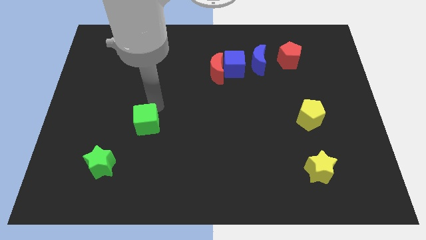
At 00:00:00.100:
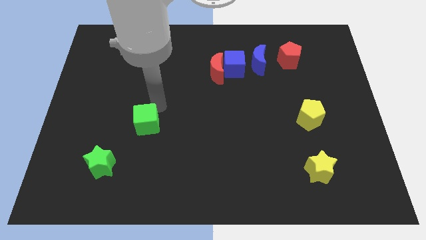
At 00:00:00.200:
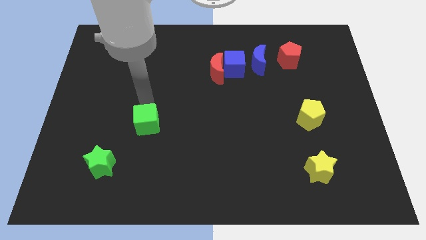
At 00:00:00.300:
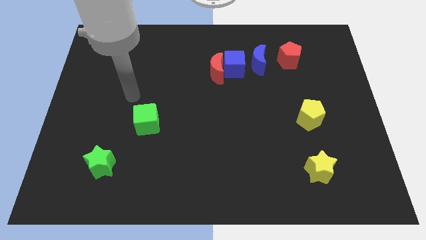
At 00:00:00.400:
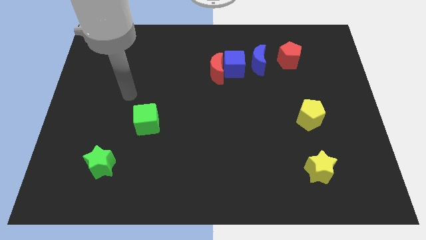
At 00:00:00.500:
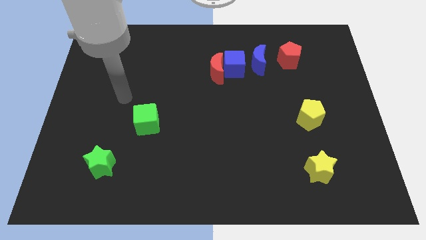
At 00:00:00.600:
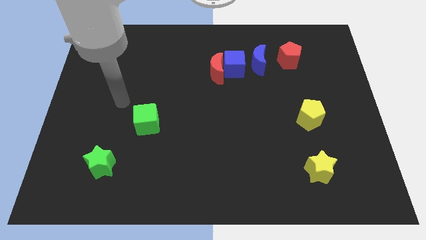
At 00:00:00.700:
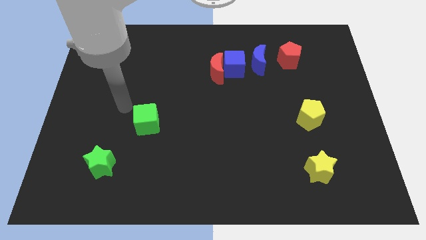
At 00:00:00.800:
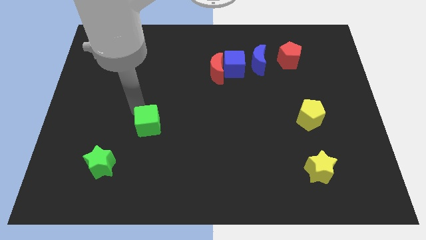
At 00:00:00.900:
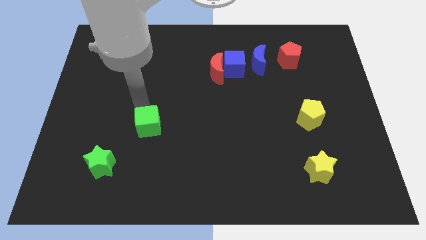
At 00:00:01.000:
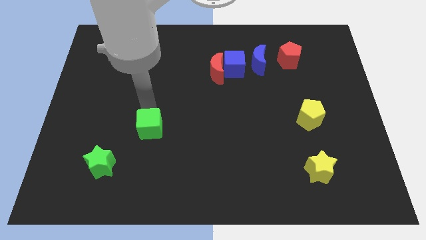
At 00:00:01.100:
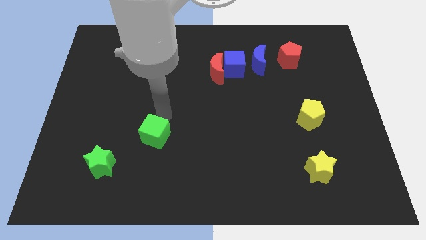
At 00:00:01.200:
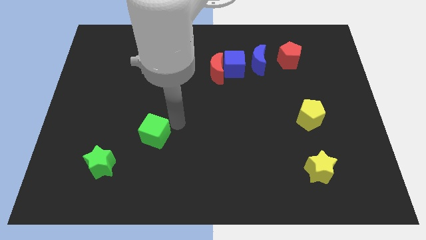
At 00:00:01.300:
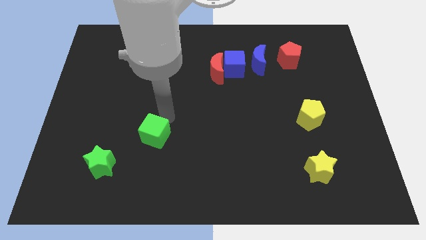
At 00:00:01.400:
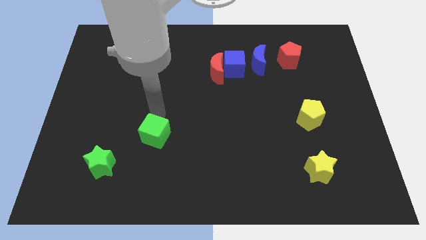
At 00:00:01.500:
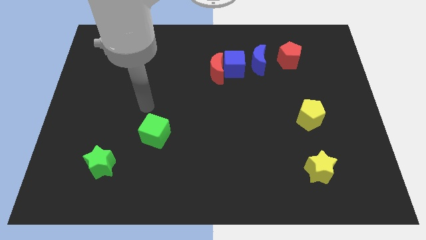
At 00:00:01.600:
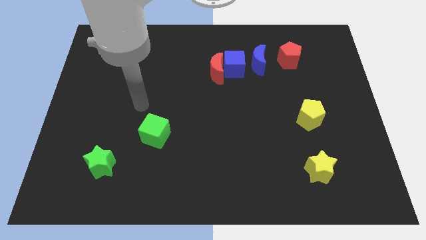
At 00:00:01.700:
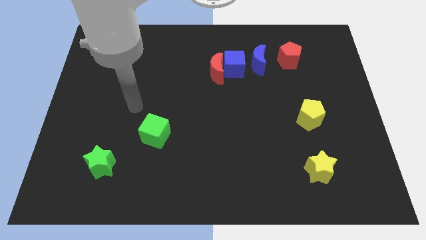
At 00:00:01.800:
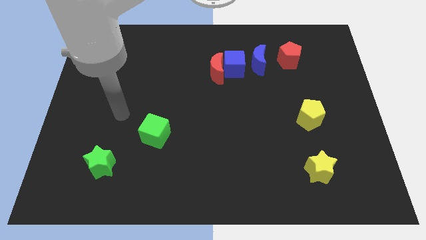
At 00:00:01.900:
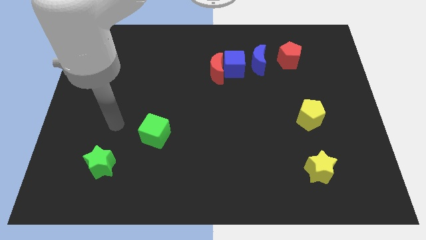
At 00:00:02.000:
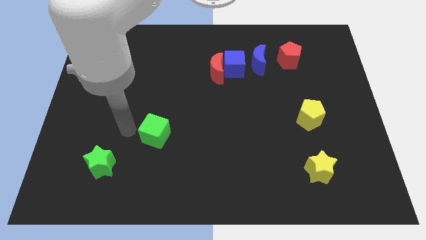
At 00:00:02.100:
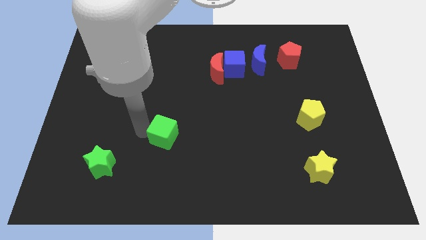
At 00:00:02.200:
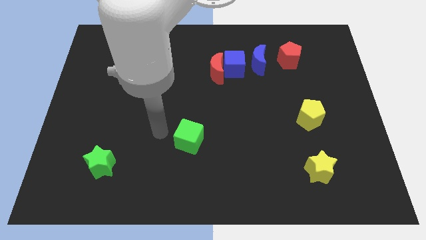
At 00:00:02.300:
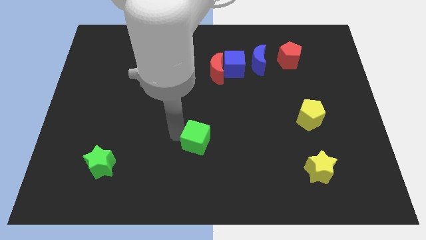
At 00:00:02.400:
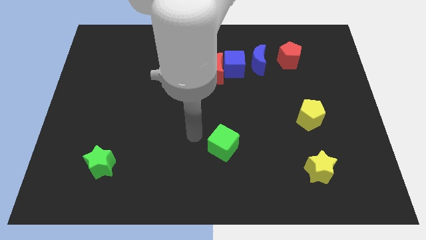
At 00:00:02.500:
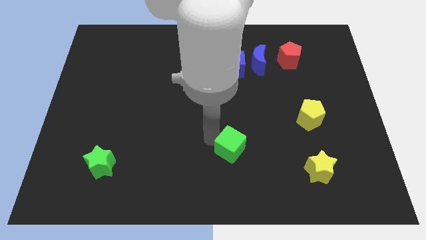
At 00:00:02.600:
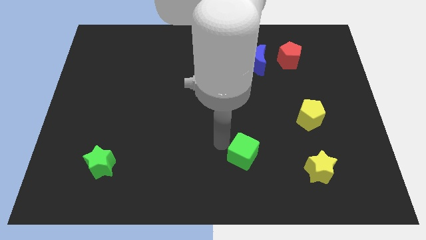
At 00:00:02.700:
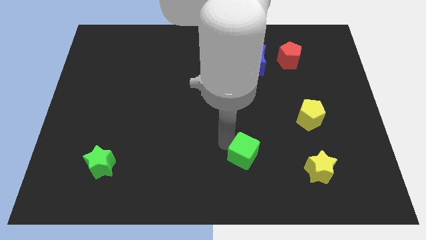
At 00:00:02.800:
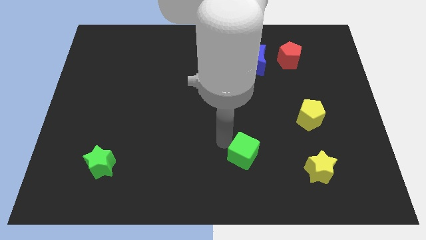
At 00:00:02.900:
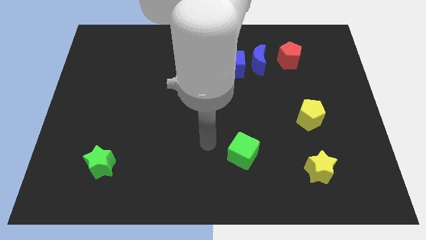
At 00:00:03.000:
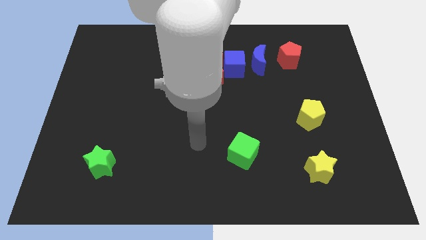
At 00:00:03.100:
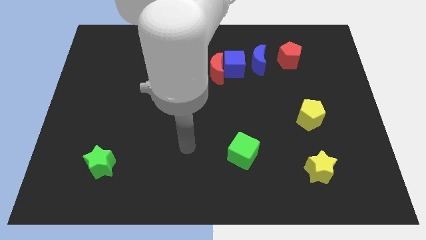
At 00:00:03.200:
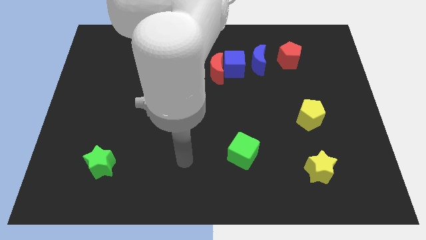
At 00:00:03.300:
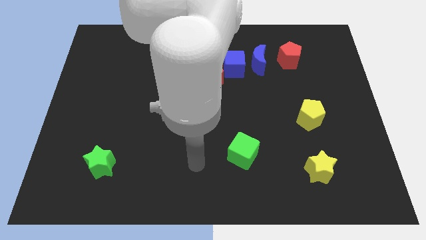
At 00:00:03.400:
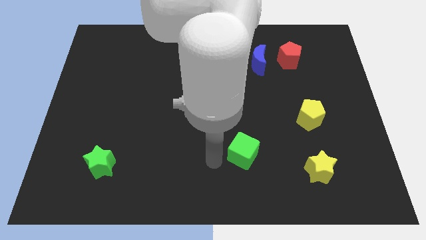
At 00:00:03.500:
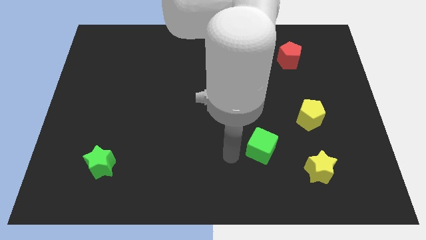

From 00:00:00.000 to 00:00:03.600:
make a triangle with the green cube yellow pentagon and yellow star

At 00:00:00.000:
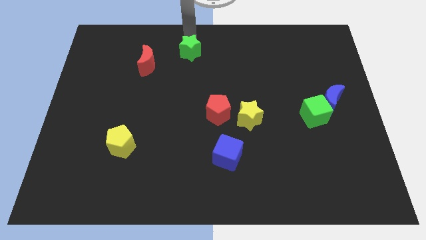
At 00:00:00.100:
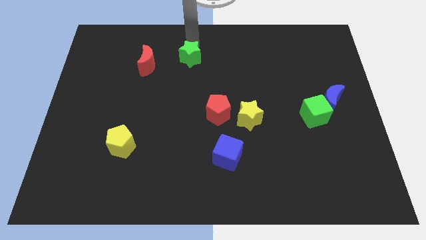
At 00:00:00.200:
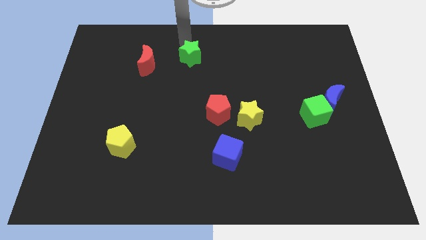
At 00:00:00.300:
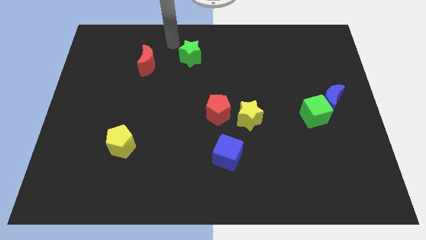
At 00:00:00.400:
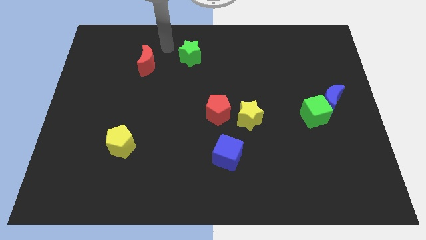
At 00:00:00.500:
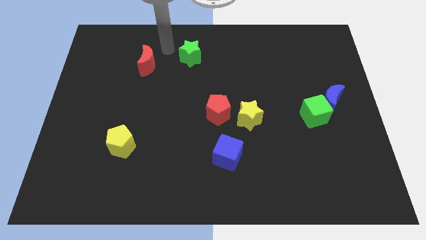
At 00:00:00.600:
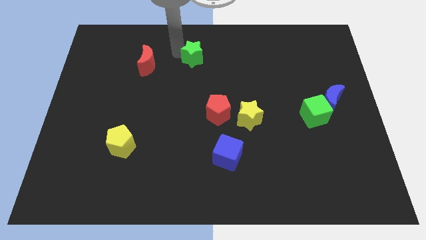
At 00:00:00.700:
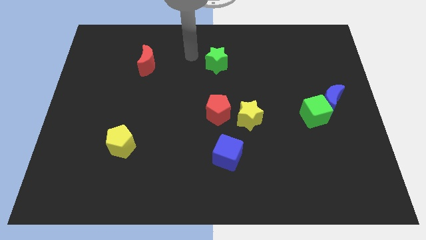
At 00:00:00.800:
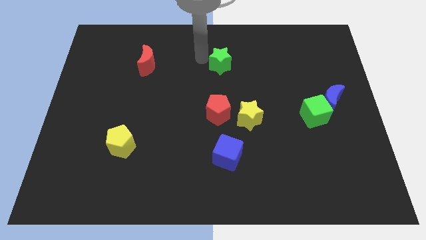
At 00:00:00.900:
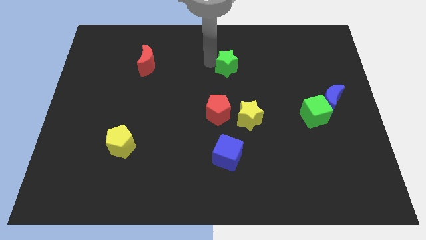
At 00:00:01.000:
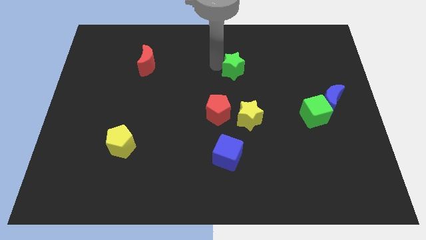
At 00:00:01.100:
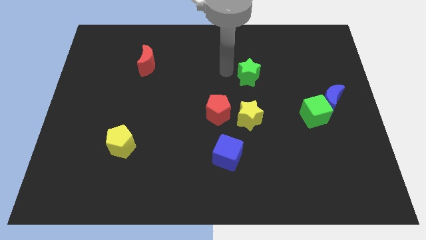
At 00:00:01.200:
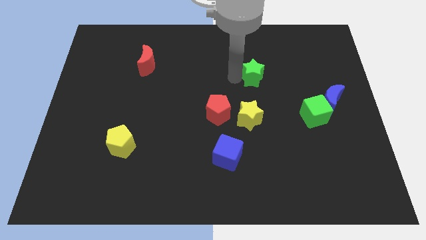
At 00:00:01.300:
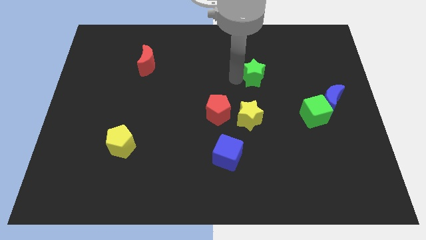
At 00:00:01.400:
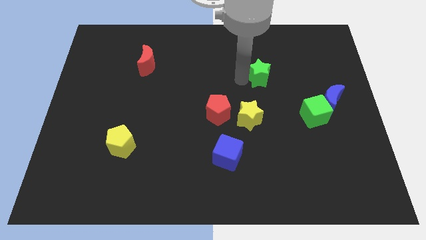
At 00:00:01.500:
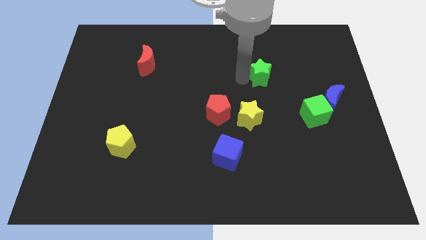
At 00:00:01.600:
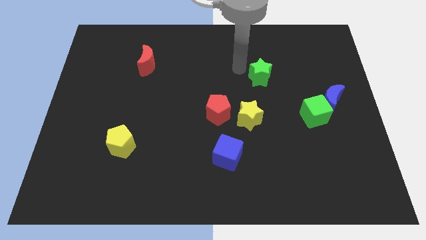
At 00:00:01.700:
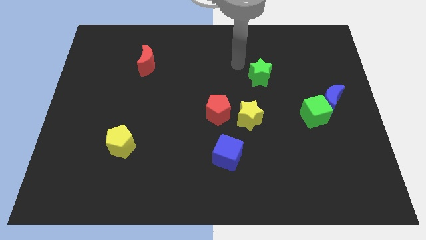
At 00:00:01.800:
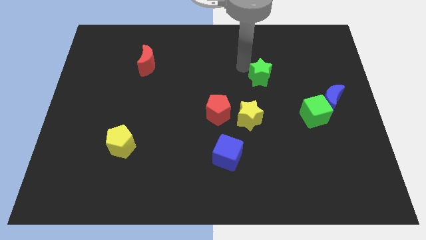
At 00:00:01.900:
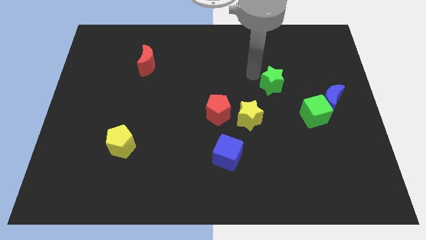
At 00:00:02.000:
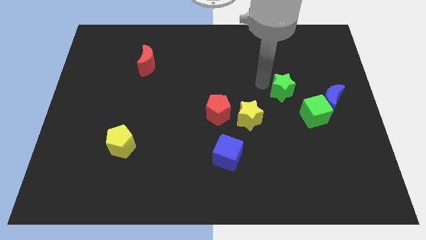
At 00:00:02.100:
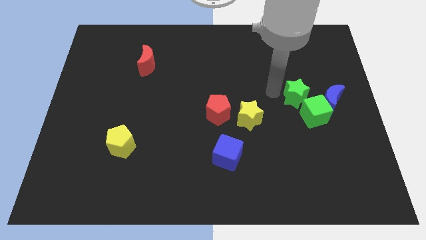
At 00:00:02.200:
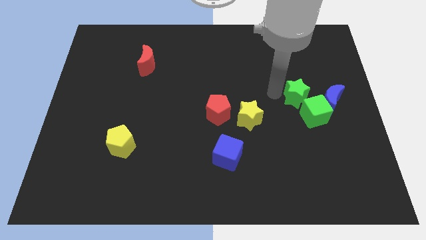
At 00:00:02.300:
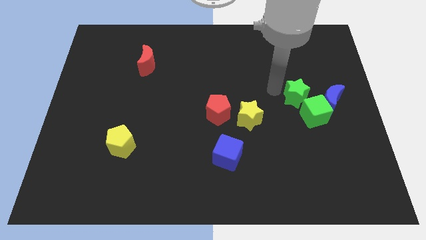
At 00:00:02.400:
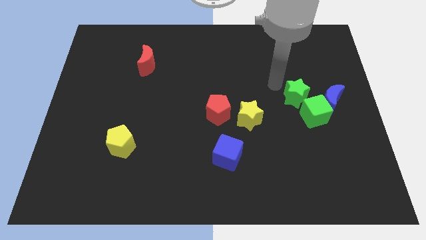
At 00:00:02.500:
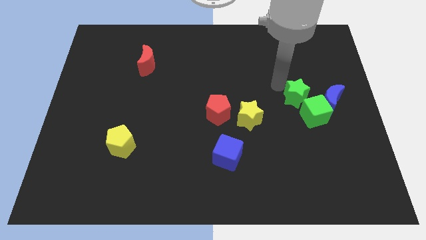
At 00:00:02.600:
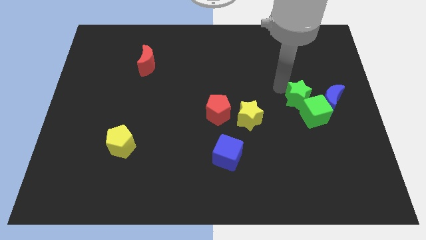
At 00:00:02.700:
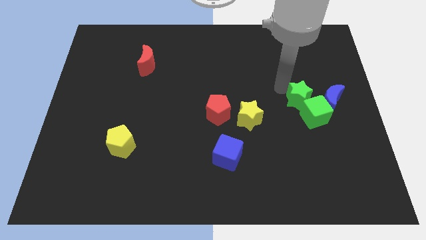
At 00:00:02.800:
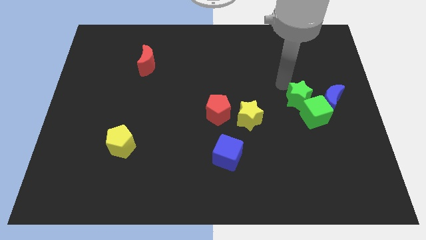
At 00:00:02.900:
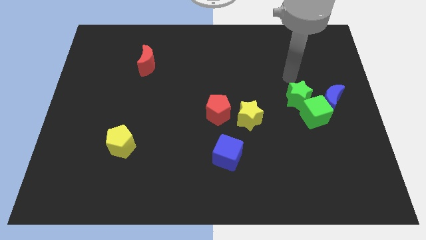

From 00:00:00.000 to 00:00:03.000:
push the green star into the green cube

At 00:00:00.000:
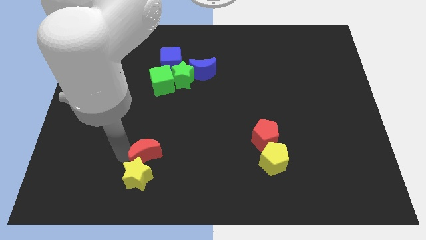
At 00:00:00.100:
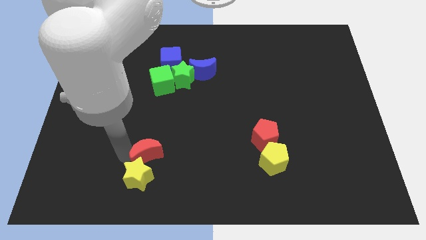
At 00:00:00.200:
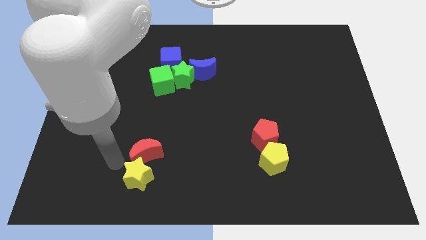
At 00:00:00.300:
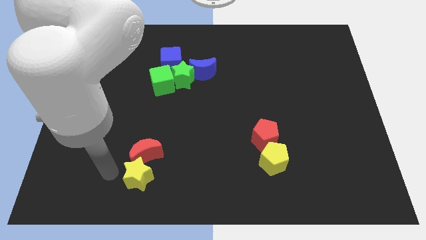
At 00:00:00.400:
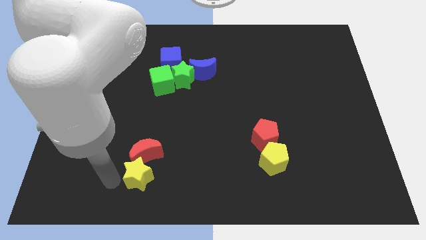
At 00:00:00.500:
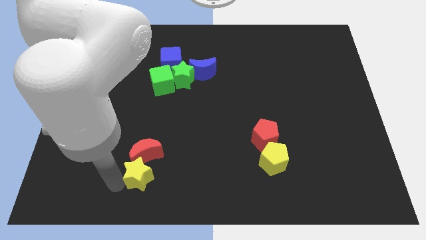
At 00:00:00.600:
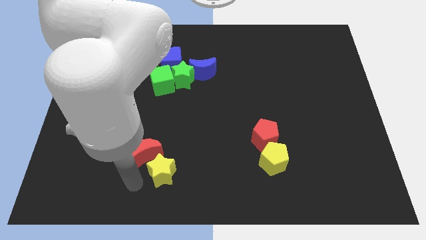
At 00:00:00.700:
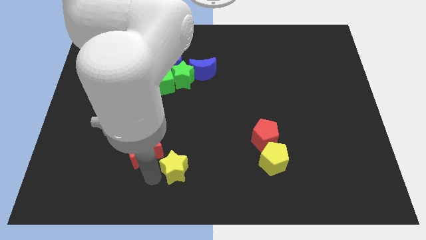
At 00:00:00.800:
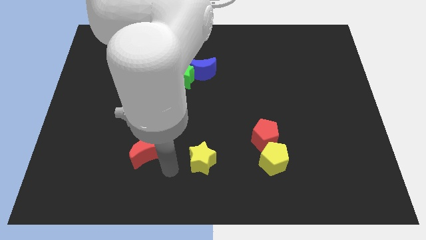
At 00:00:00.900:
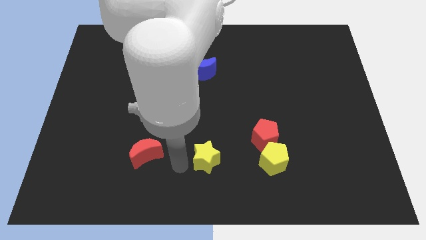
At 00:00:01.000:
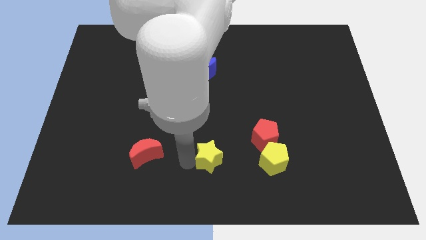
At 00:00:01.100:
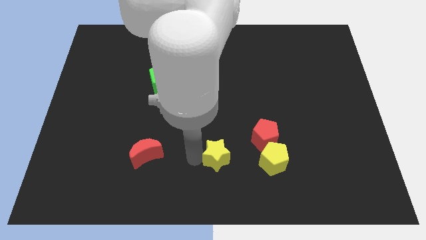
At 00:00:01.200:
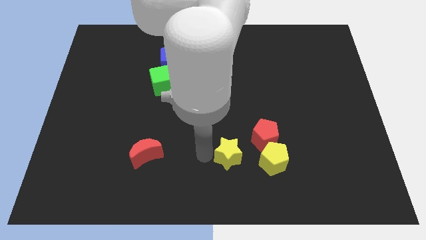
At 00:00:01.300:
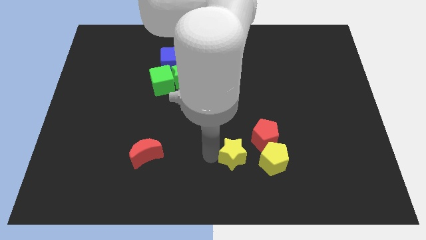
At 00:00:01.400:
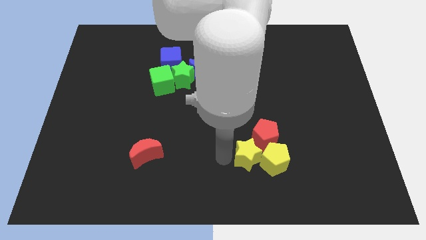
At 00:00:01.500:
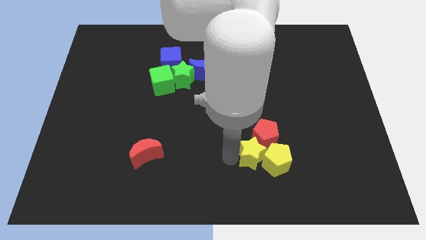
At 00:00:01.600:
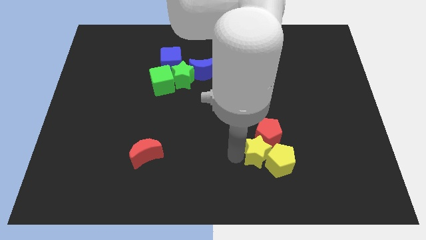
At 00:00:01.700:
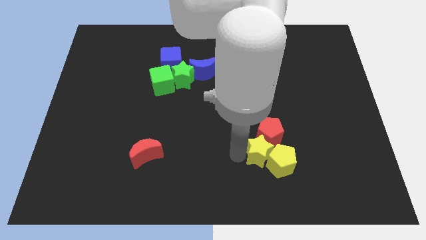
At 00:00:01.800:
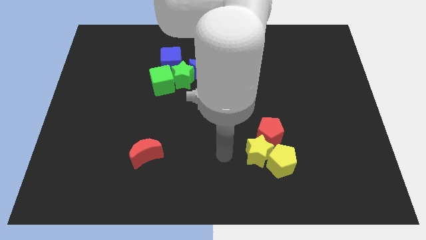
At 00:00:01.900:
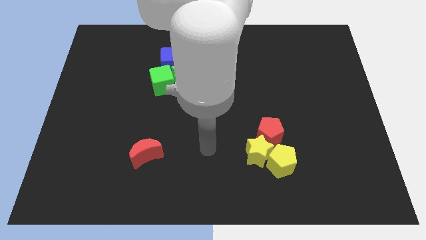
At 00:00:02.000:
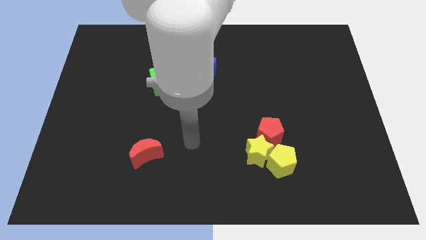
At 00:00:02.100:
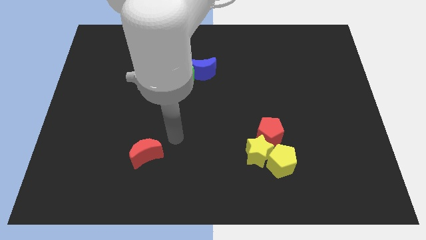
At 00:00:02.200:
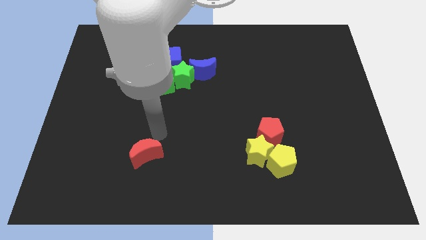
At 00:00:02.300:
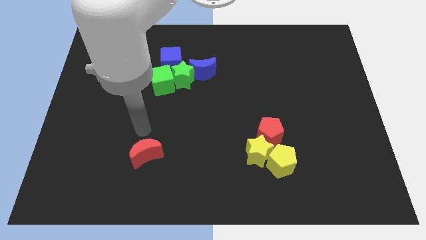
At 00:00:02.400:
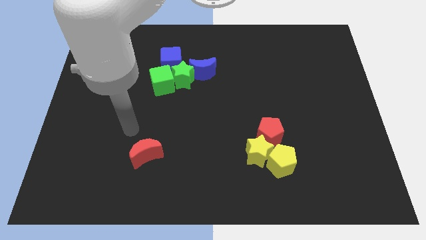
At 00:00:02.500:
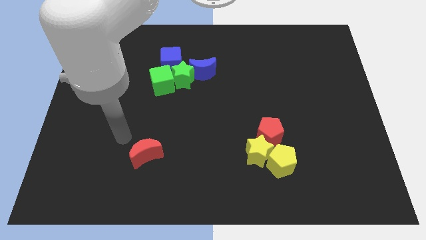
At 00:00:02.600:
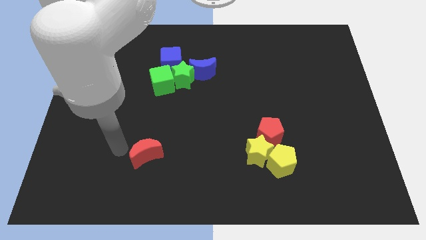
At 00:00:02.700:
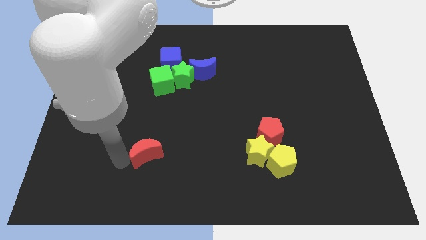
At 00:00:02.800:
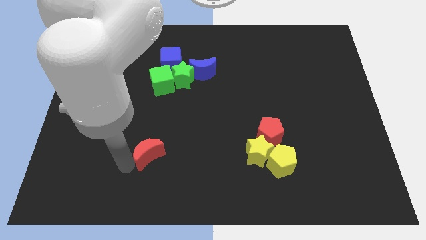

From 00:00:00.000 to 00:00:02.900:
push the yellow star into the yellow pentagon
